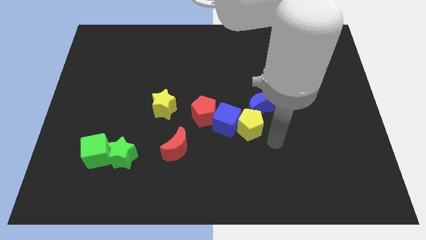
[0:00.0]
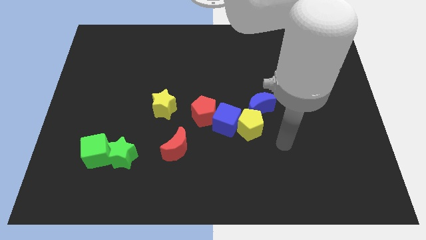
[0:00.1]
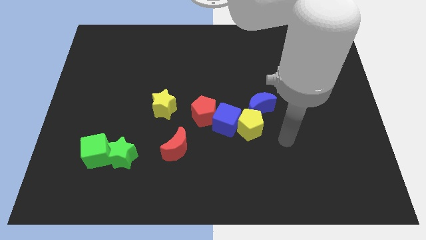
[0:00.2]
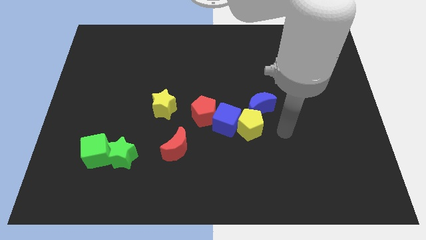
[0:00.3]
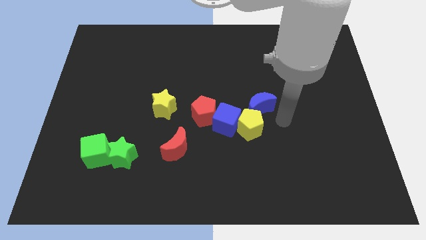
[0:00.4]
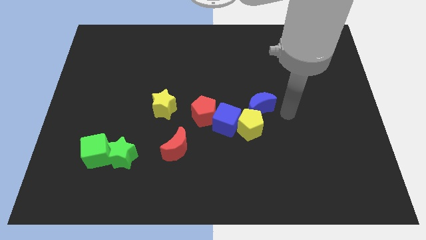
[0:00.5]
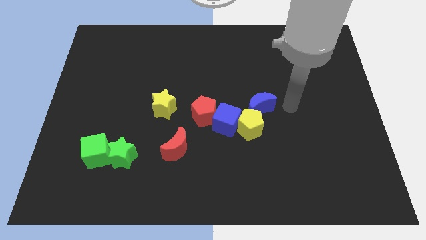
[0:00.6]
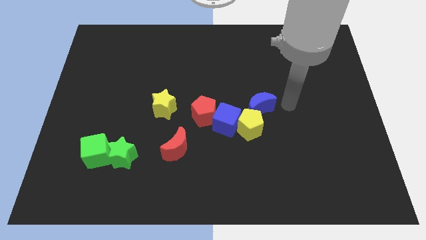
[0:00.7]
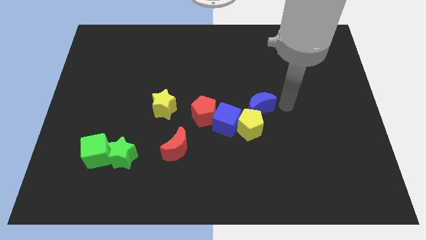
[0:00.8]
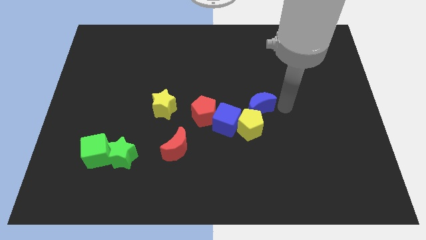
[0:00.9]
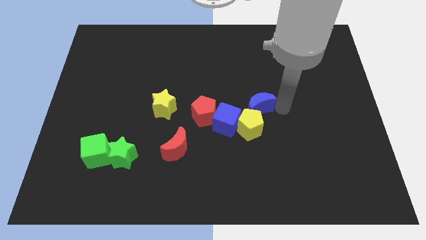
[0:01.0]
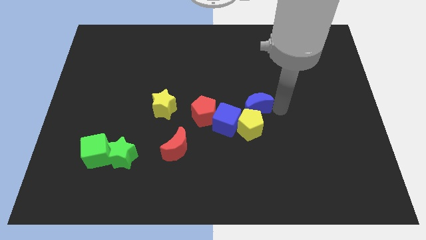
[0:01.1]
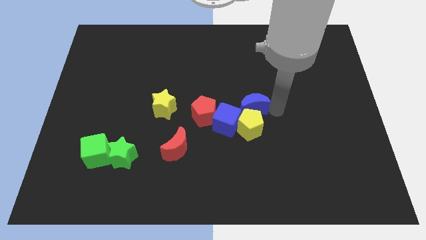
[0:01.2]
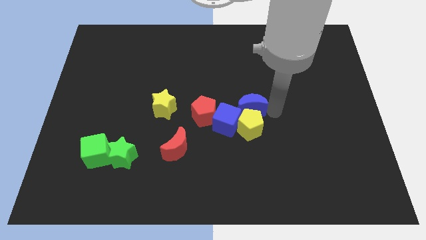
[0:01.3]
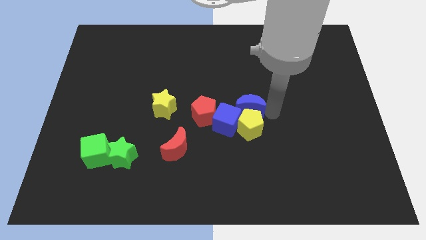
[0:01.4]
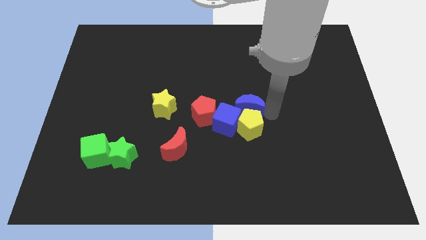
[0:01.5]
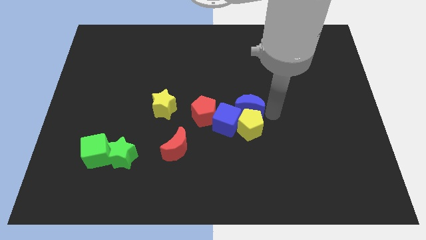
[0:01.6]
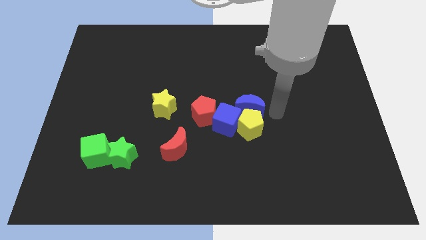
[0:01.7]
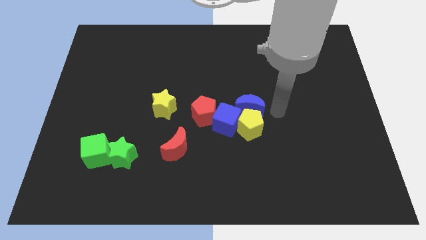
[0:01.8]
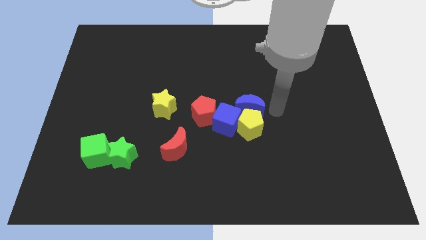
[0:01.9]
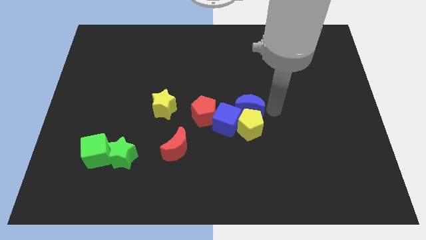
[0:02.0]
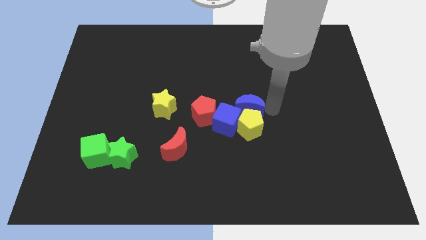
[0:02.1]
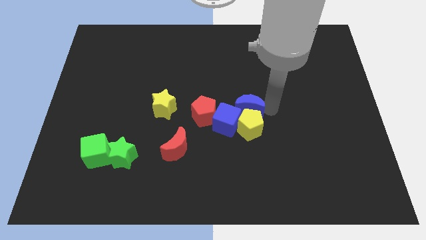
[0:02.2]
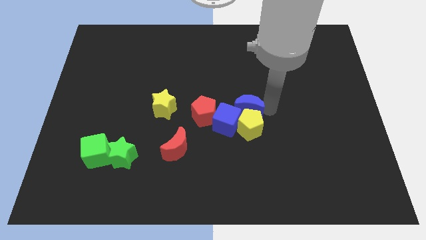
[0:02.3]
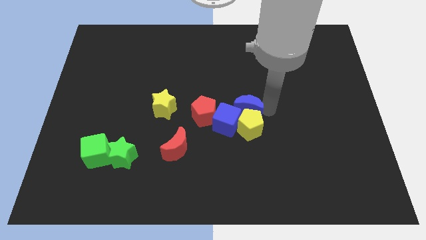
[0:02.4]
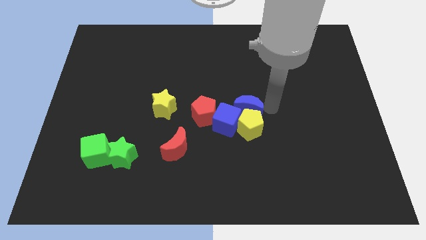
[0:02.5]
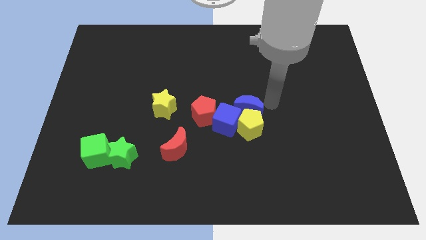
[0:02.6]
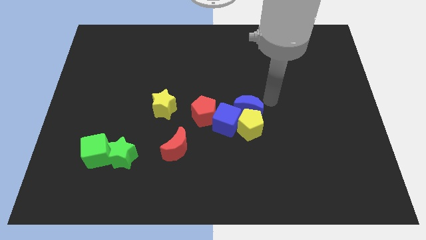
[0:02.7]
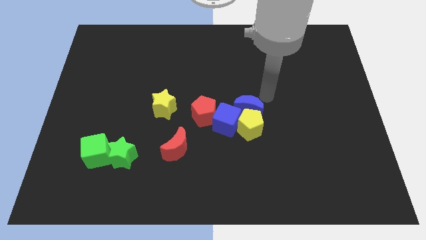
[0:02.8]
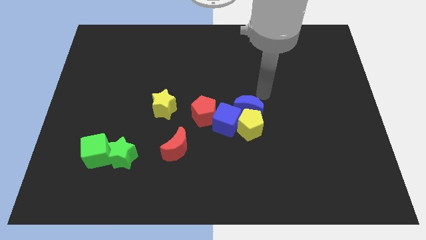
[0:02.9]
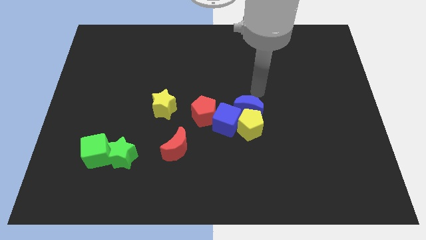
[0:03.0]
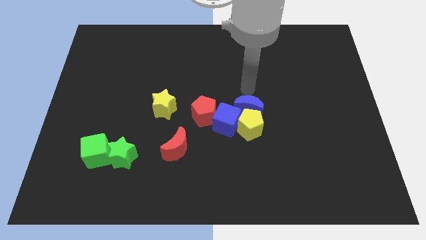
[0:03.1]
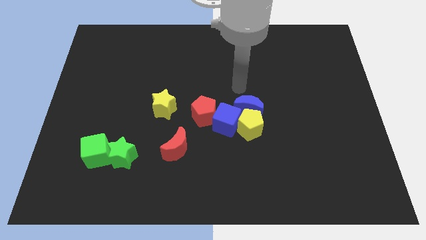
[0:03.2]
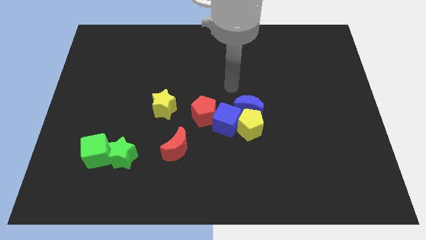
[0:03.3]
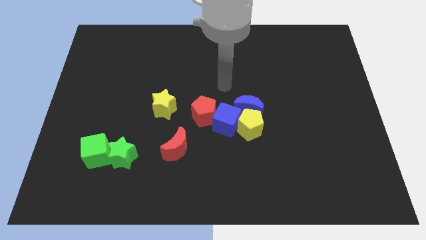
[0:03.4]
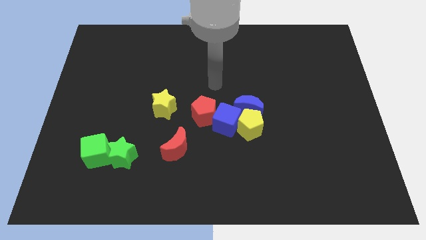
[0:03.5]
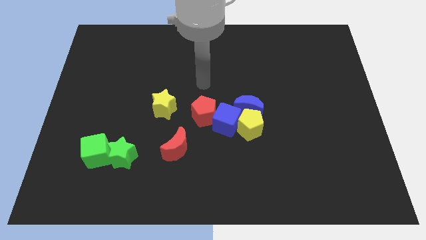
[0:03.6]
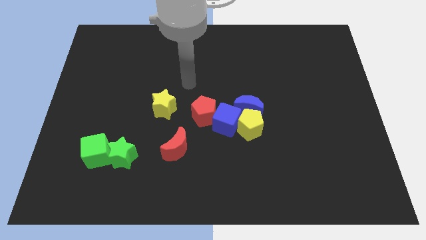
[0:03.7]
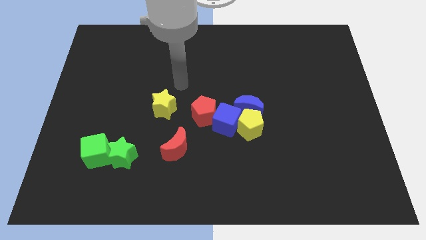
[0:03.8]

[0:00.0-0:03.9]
place the blue moon to the top side of the yellow pentagon

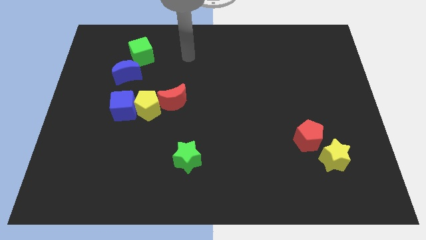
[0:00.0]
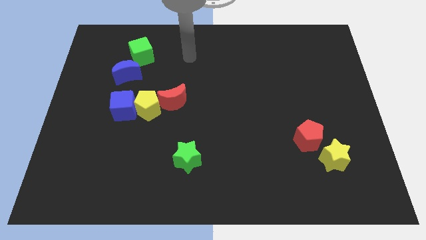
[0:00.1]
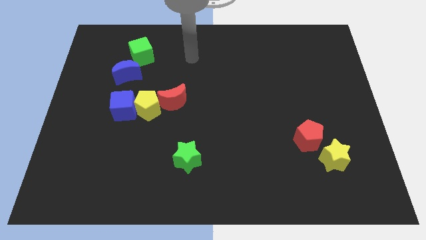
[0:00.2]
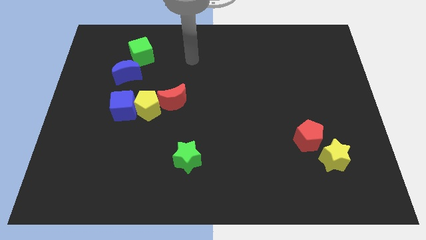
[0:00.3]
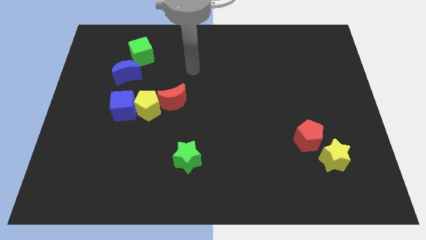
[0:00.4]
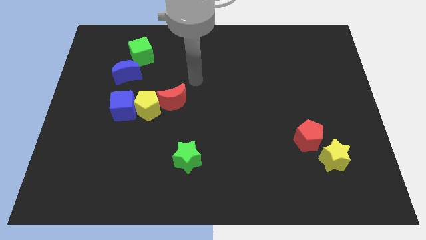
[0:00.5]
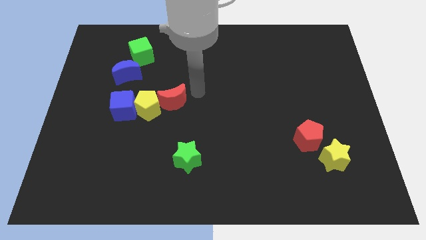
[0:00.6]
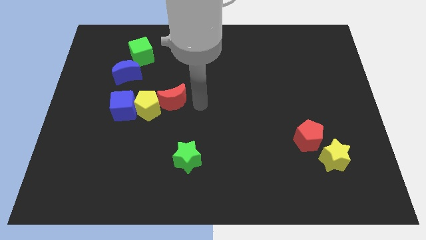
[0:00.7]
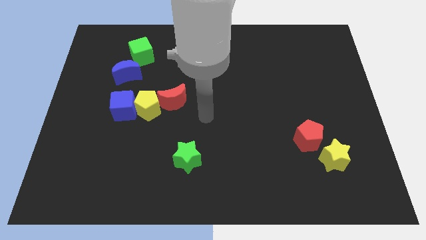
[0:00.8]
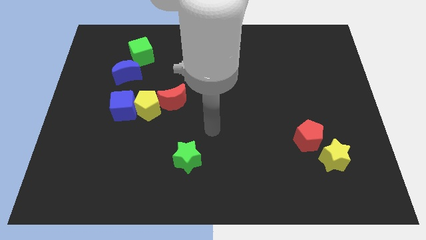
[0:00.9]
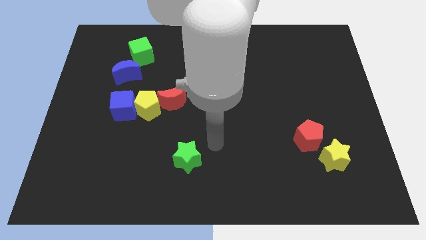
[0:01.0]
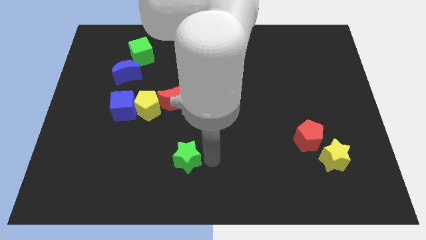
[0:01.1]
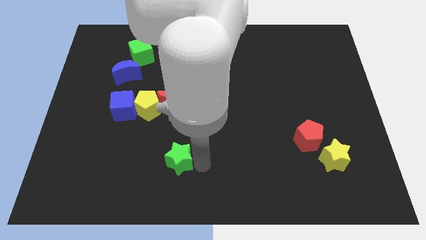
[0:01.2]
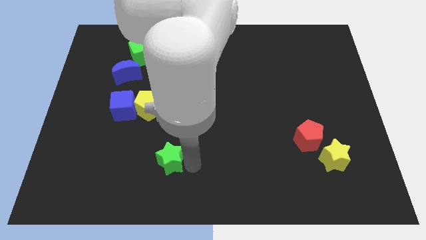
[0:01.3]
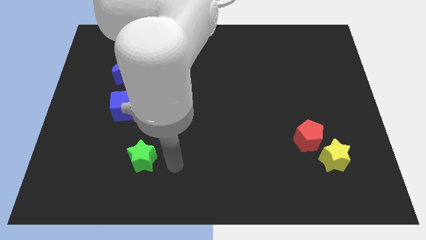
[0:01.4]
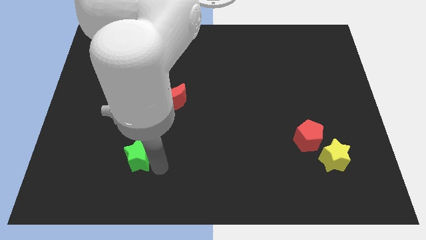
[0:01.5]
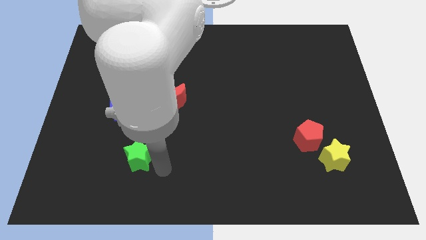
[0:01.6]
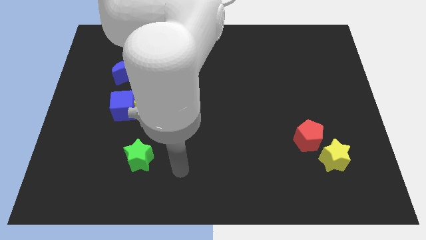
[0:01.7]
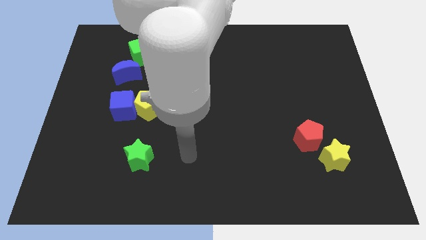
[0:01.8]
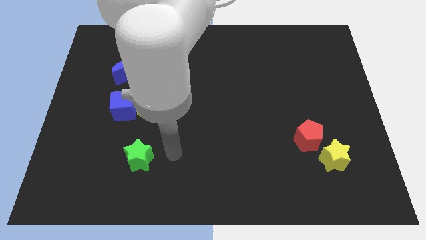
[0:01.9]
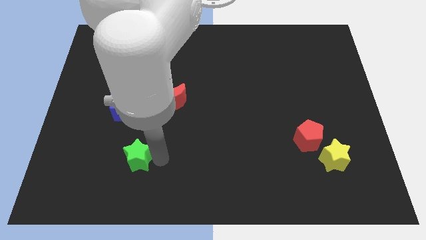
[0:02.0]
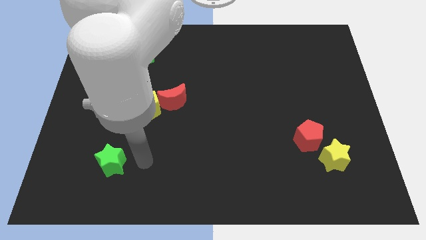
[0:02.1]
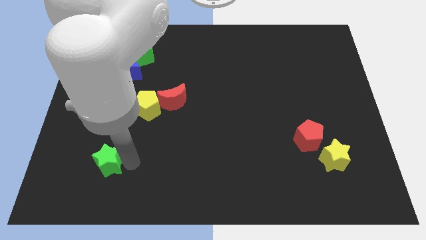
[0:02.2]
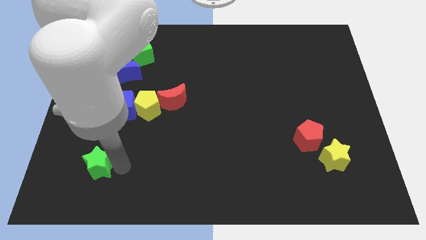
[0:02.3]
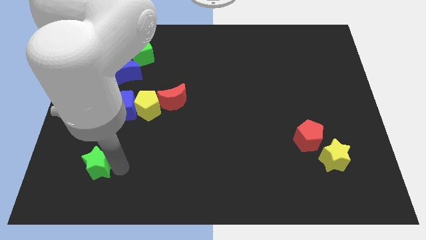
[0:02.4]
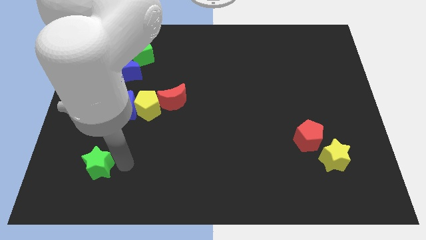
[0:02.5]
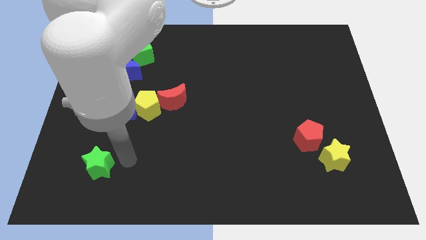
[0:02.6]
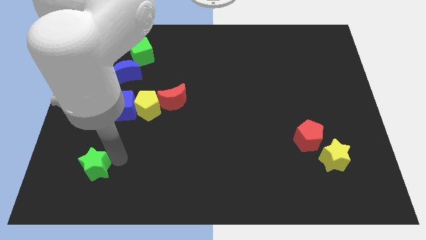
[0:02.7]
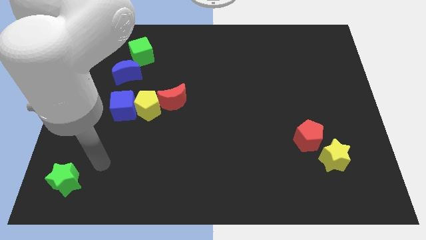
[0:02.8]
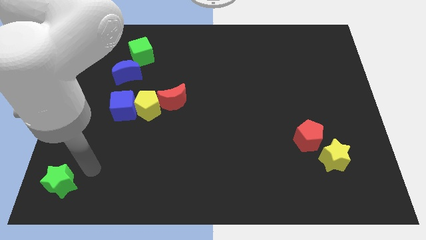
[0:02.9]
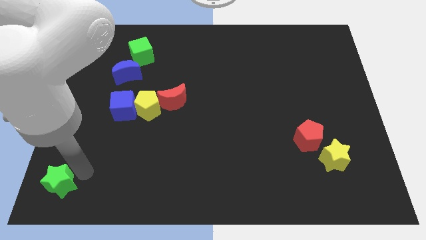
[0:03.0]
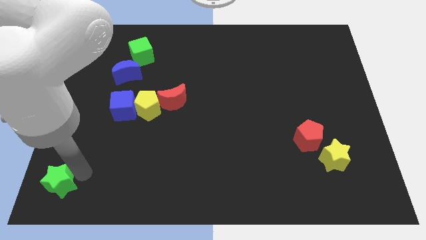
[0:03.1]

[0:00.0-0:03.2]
move the green star towards the bottom left side of the board

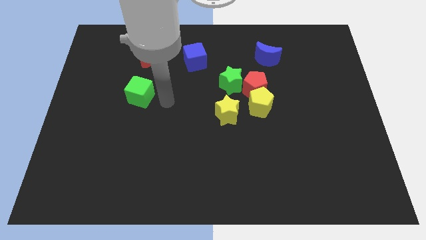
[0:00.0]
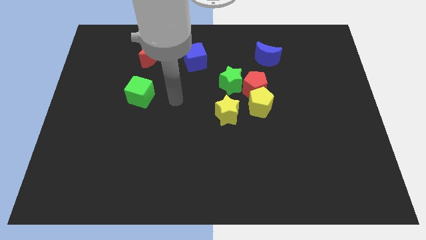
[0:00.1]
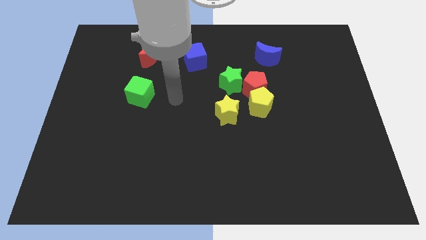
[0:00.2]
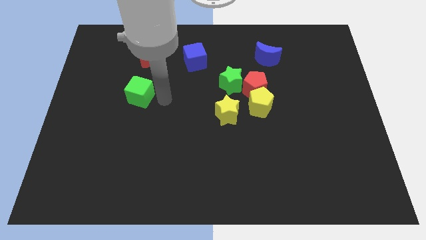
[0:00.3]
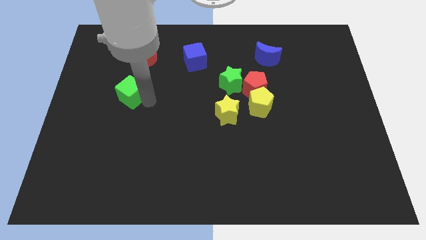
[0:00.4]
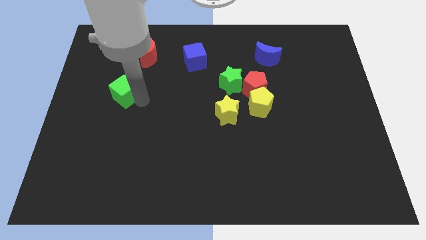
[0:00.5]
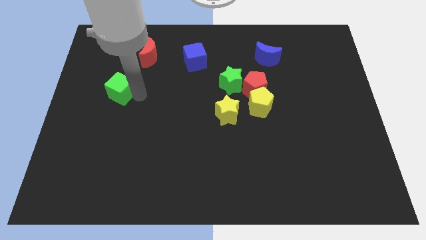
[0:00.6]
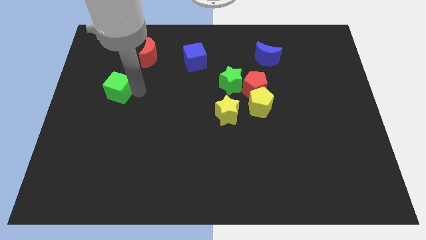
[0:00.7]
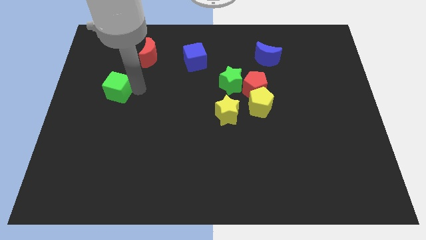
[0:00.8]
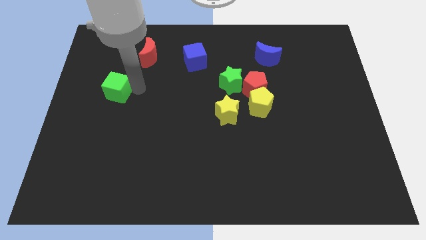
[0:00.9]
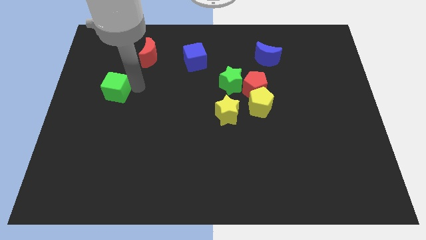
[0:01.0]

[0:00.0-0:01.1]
push green cube to left side

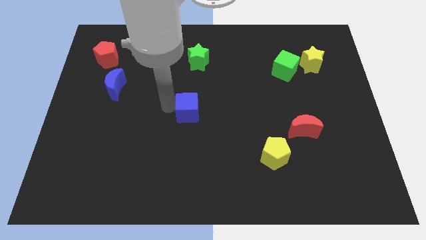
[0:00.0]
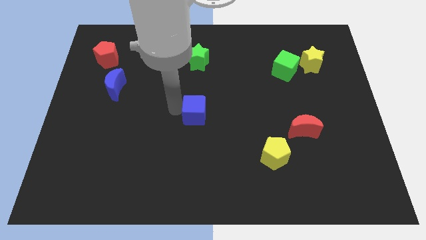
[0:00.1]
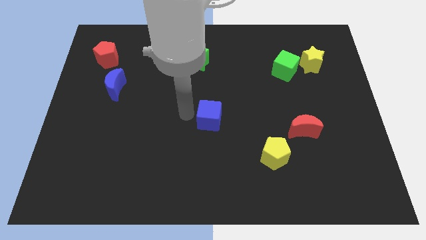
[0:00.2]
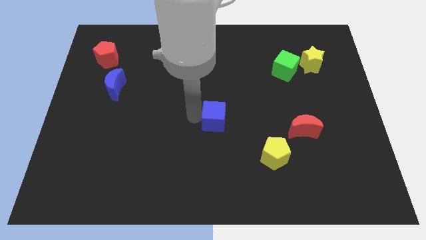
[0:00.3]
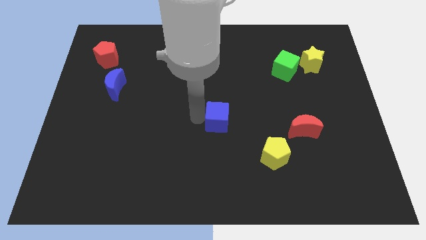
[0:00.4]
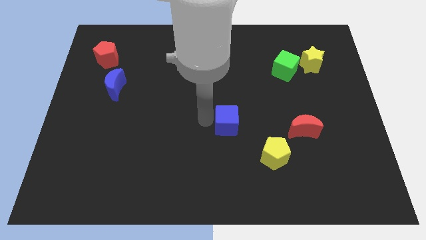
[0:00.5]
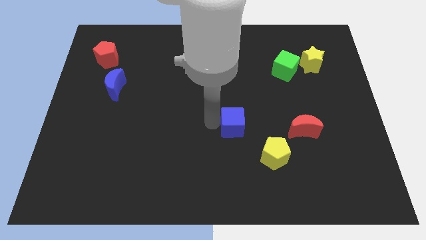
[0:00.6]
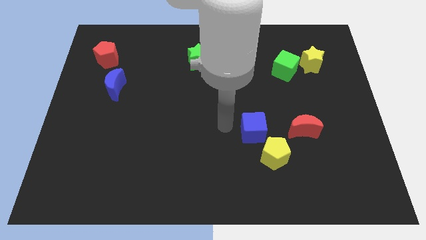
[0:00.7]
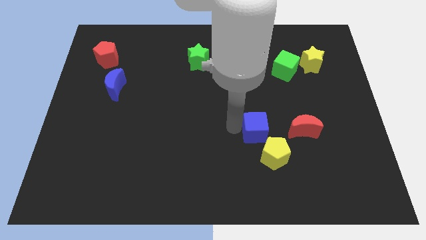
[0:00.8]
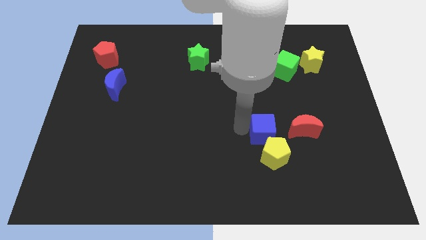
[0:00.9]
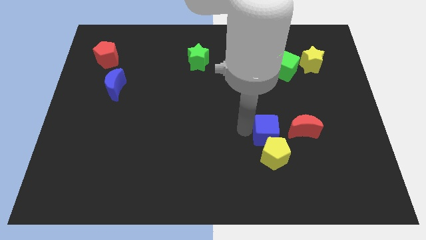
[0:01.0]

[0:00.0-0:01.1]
push the blue cube to the top of the yellow pentagon
